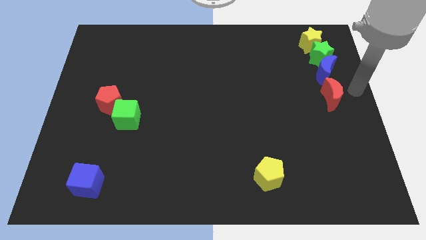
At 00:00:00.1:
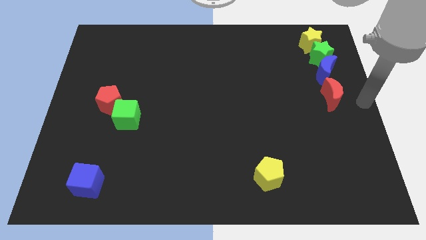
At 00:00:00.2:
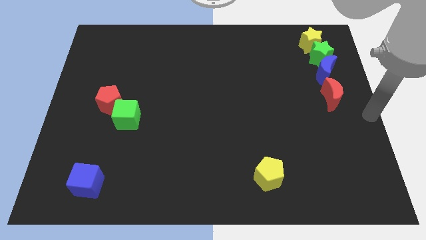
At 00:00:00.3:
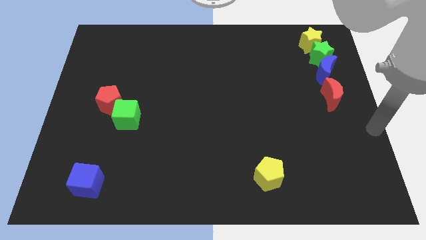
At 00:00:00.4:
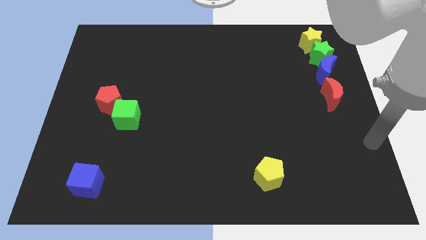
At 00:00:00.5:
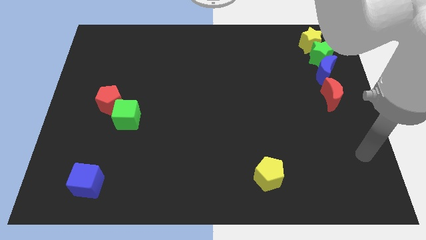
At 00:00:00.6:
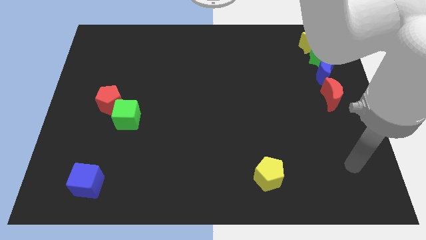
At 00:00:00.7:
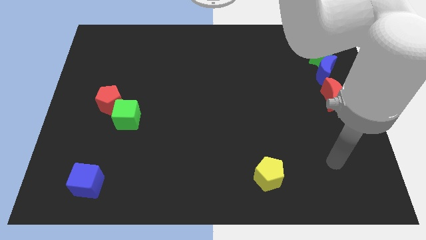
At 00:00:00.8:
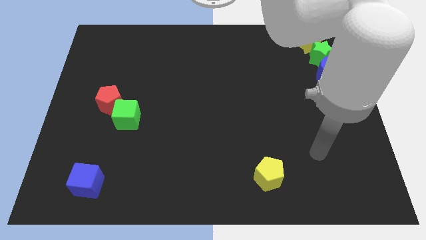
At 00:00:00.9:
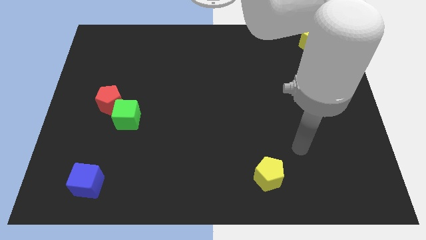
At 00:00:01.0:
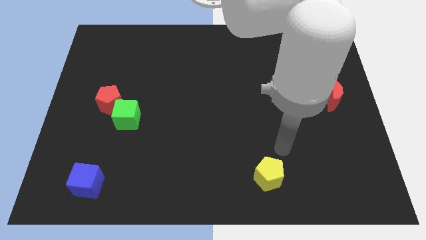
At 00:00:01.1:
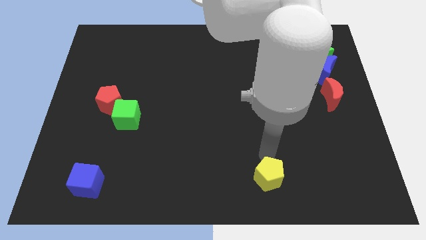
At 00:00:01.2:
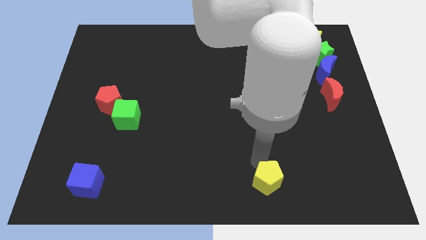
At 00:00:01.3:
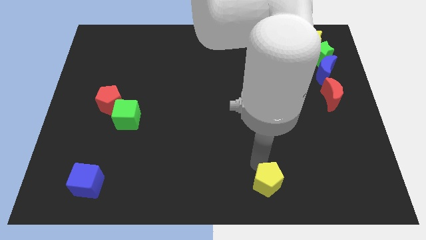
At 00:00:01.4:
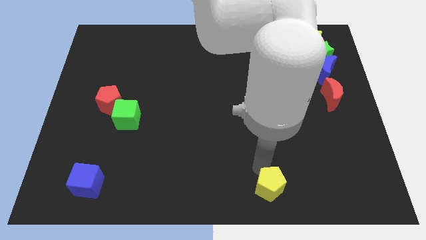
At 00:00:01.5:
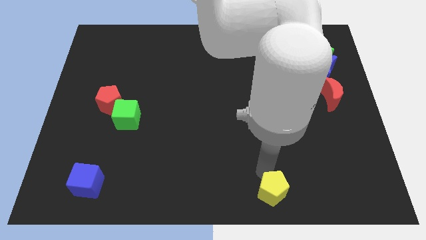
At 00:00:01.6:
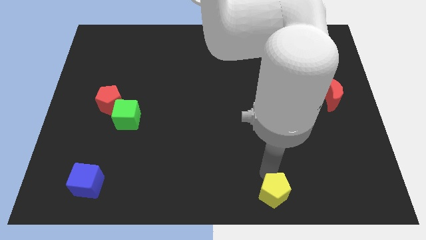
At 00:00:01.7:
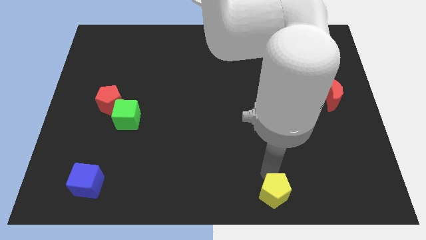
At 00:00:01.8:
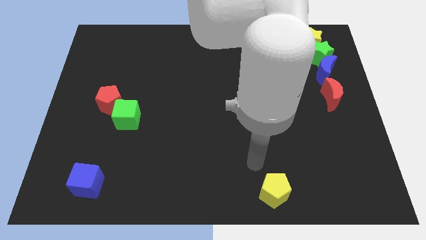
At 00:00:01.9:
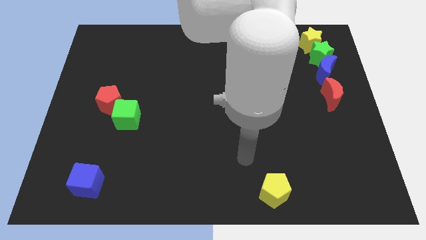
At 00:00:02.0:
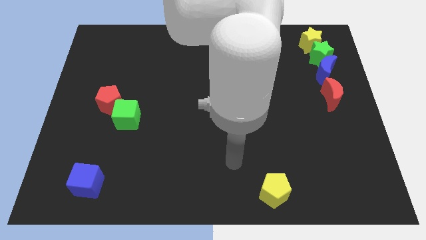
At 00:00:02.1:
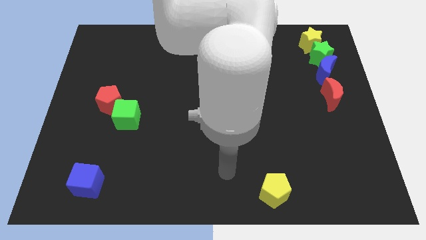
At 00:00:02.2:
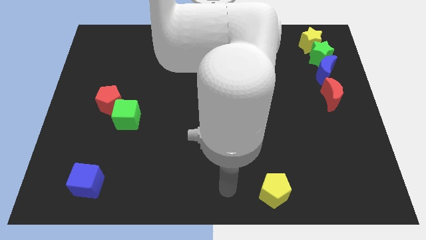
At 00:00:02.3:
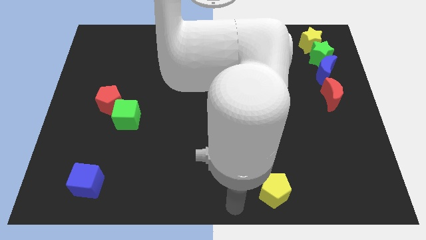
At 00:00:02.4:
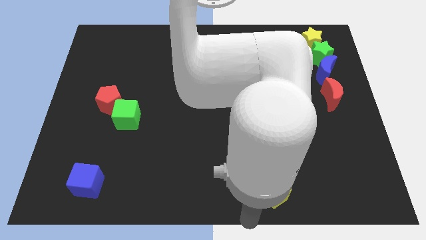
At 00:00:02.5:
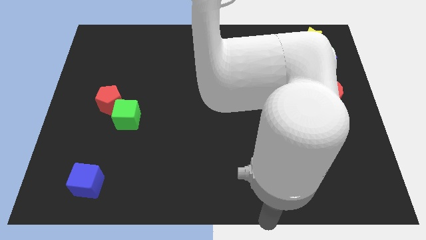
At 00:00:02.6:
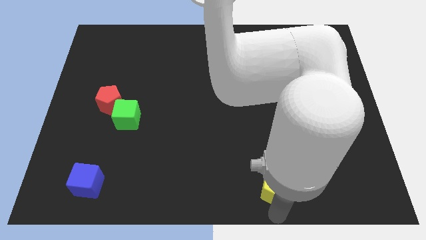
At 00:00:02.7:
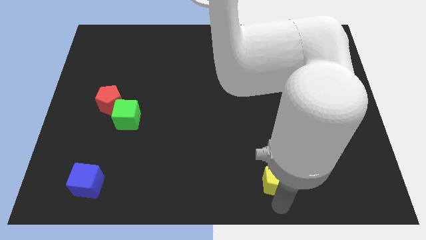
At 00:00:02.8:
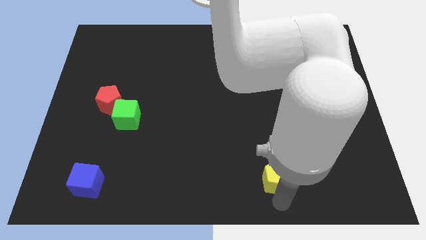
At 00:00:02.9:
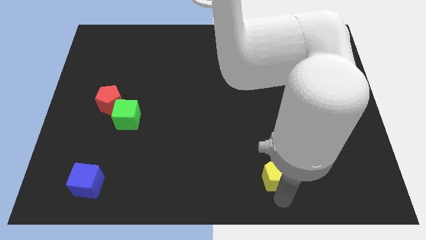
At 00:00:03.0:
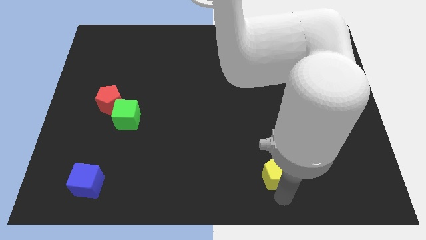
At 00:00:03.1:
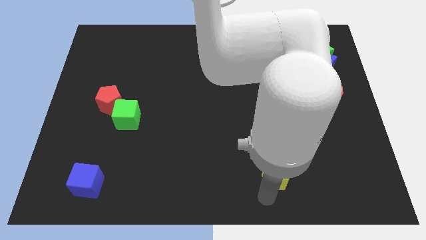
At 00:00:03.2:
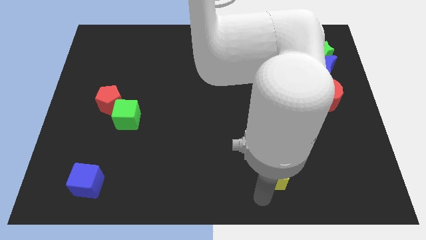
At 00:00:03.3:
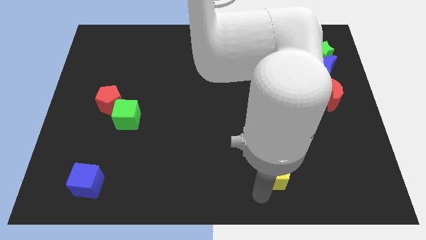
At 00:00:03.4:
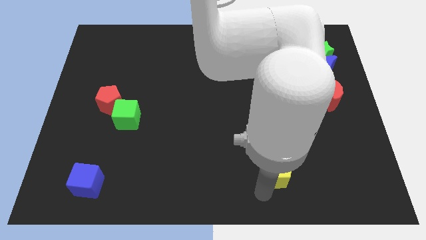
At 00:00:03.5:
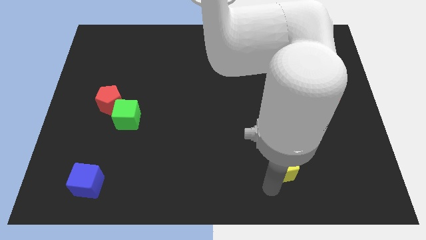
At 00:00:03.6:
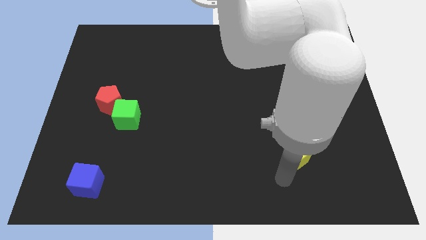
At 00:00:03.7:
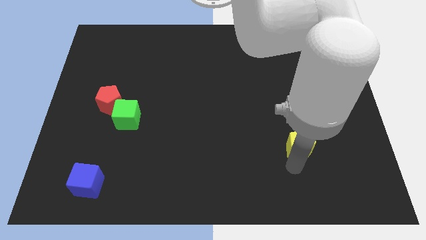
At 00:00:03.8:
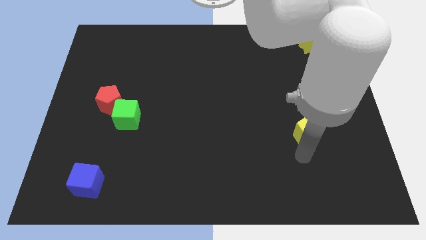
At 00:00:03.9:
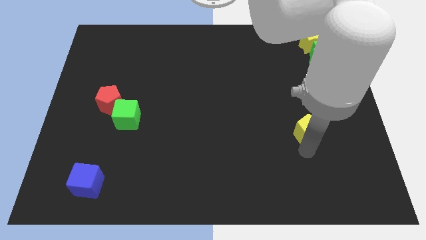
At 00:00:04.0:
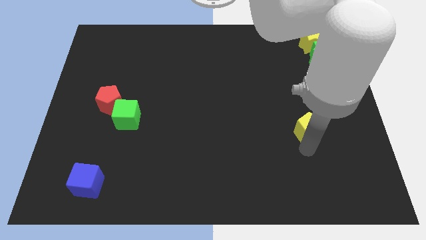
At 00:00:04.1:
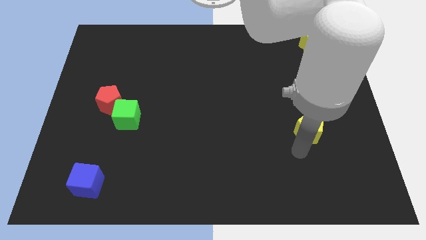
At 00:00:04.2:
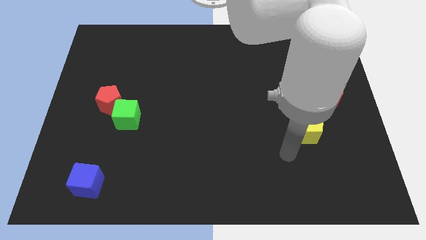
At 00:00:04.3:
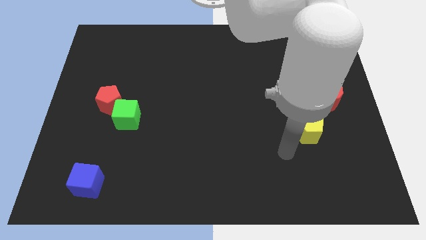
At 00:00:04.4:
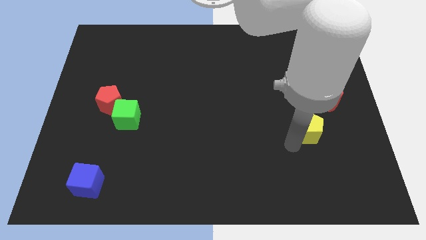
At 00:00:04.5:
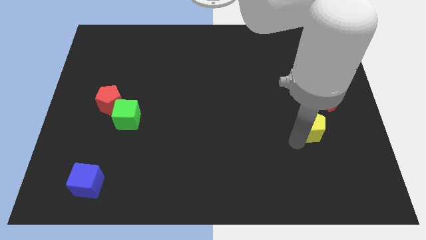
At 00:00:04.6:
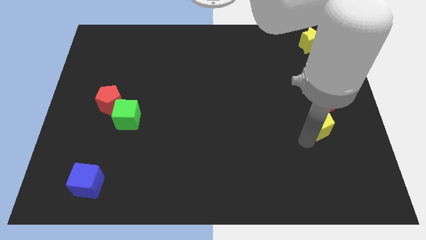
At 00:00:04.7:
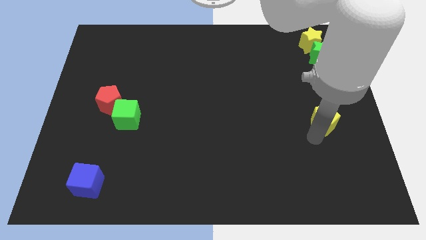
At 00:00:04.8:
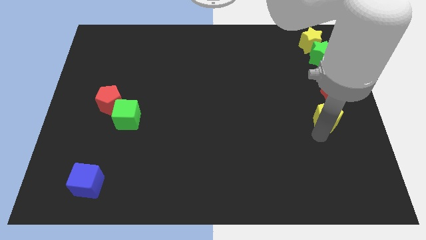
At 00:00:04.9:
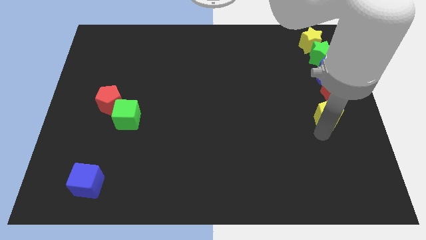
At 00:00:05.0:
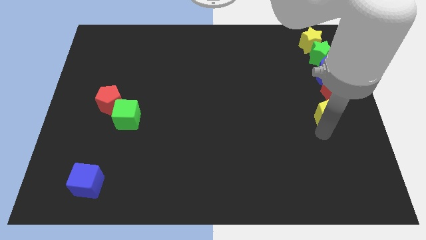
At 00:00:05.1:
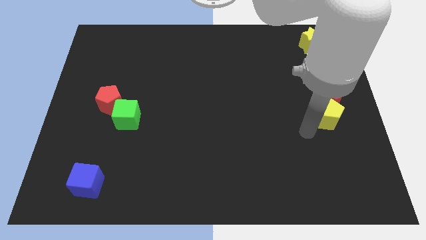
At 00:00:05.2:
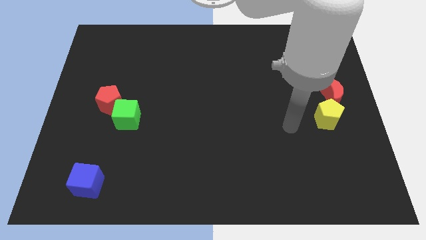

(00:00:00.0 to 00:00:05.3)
place the yellow pentagon below the red moon

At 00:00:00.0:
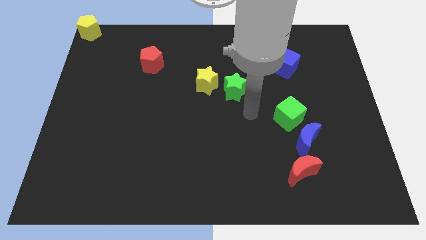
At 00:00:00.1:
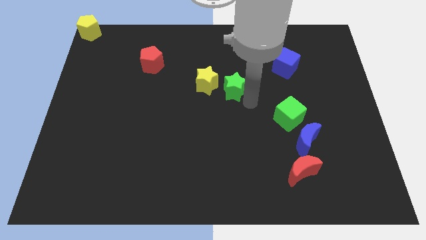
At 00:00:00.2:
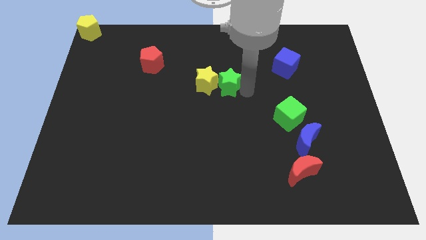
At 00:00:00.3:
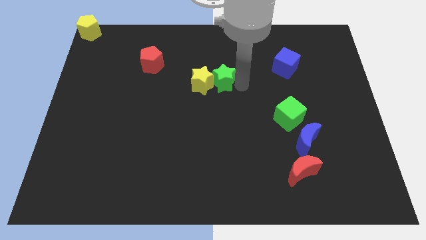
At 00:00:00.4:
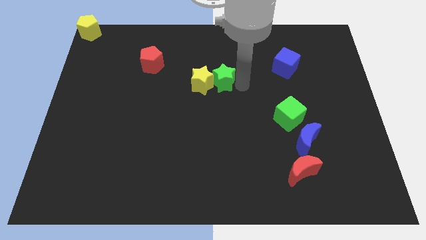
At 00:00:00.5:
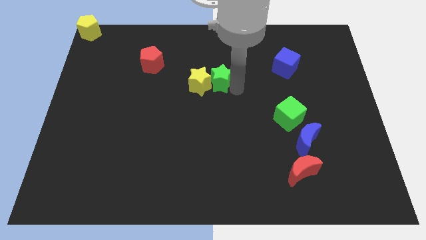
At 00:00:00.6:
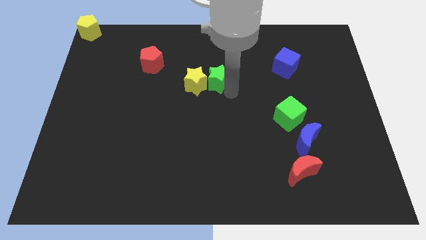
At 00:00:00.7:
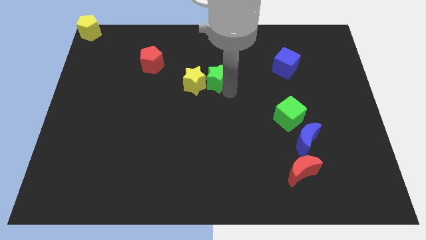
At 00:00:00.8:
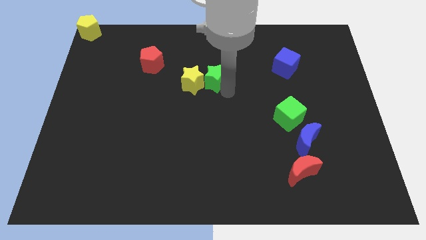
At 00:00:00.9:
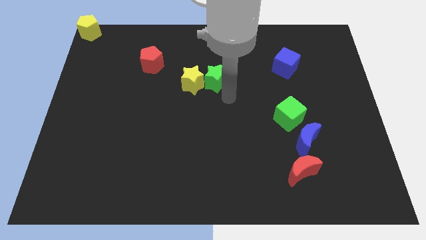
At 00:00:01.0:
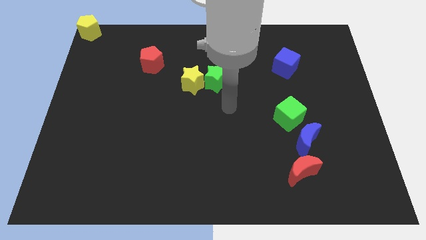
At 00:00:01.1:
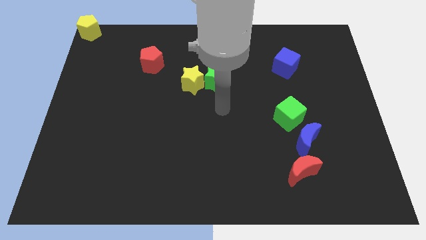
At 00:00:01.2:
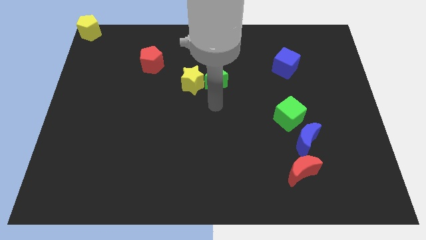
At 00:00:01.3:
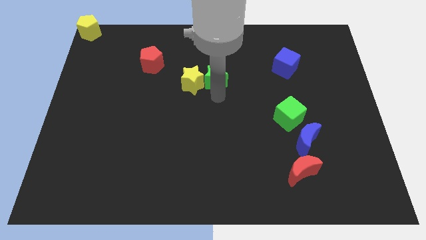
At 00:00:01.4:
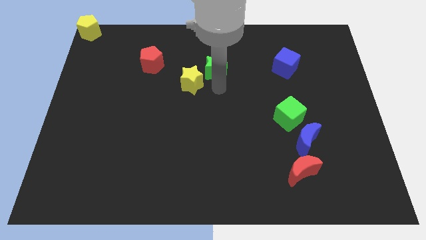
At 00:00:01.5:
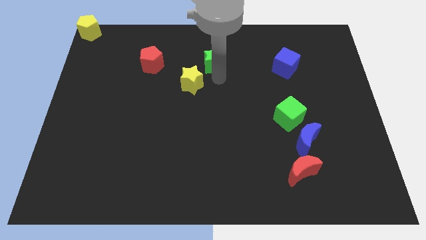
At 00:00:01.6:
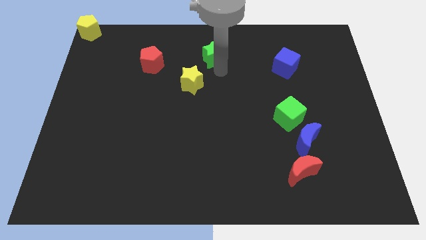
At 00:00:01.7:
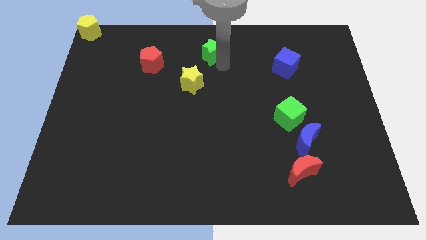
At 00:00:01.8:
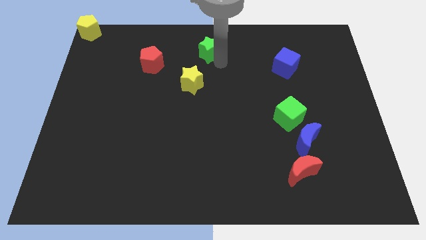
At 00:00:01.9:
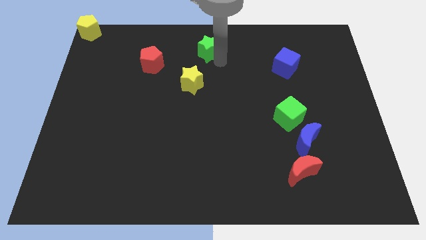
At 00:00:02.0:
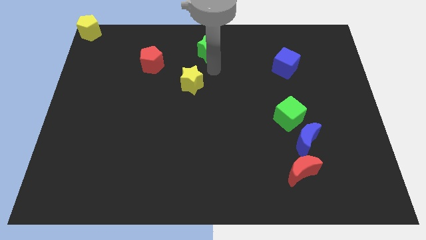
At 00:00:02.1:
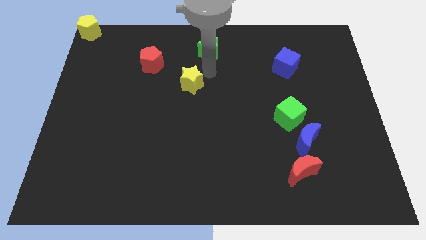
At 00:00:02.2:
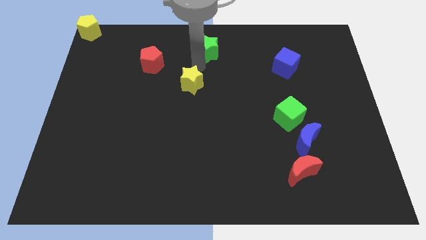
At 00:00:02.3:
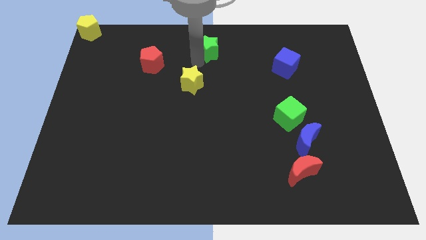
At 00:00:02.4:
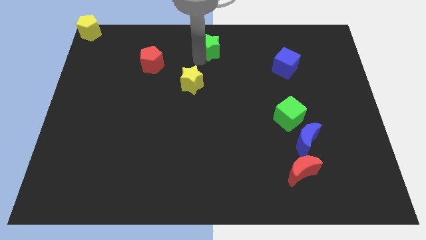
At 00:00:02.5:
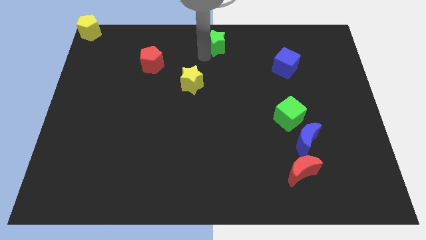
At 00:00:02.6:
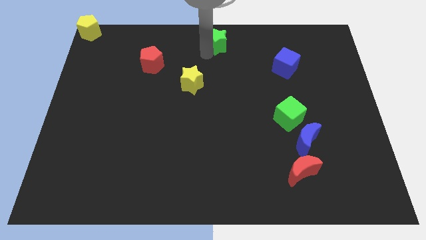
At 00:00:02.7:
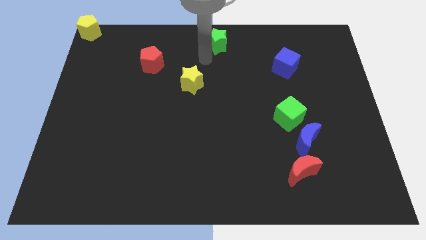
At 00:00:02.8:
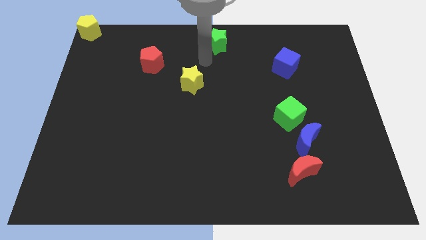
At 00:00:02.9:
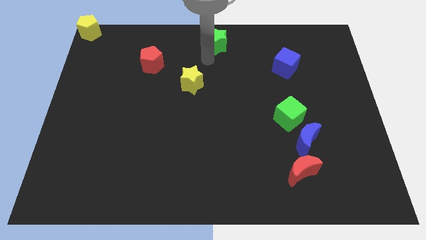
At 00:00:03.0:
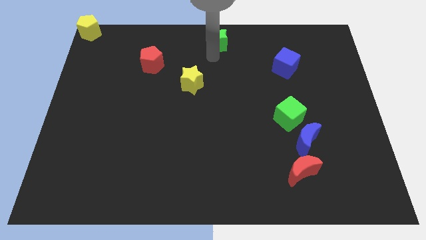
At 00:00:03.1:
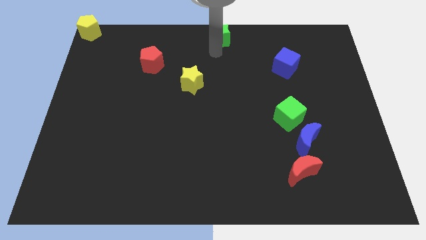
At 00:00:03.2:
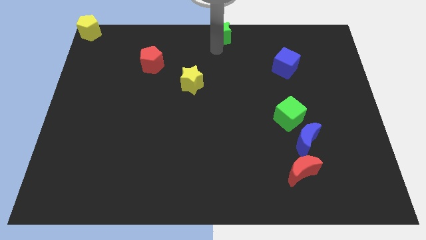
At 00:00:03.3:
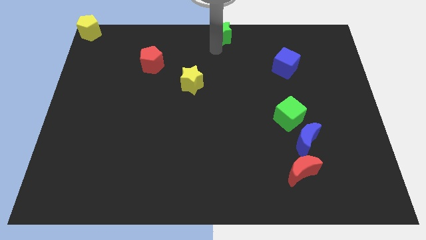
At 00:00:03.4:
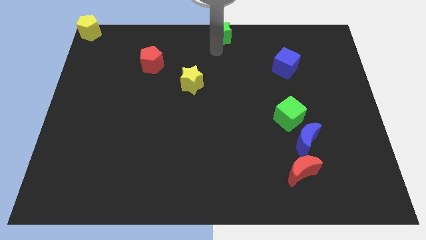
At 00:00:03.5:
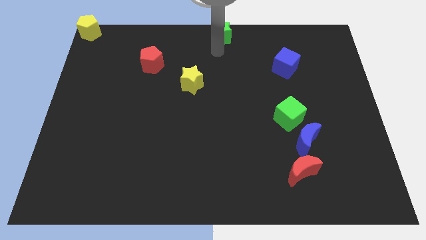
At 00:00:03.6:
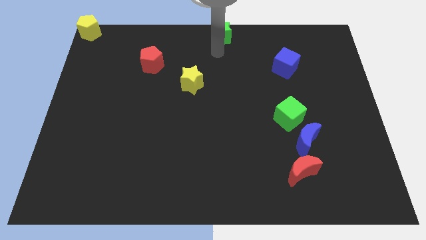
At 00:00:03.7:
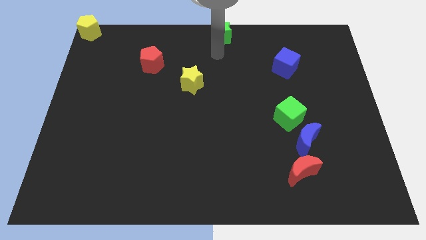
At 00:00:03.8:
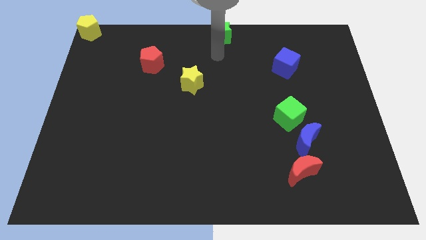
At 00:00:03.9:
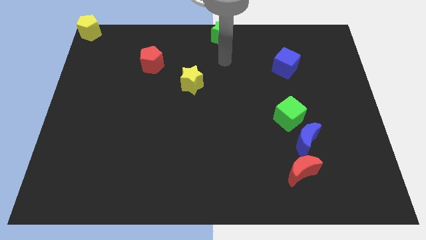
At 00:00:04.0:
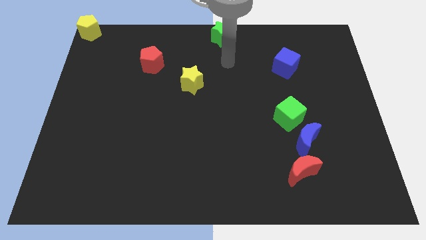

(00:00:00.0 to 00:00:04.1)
drag the green star to the top center
